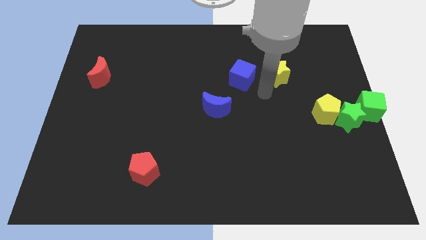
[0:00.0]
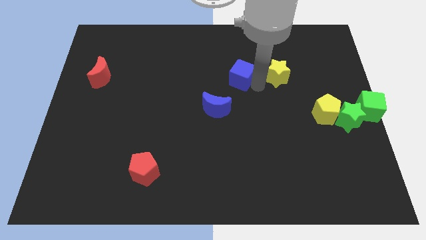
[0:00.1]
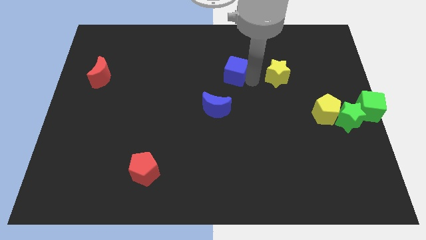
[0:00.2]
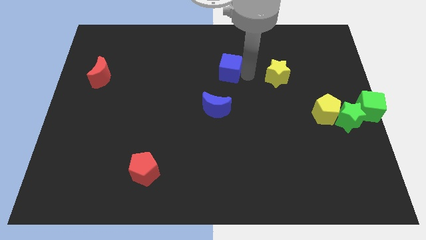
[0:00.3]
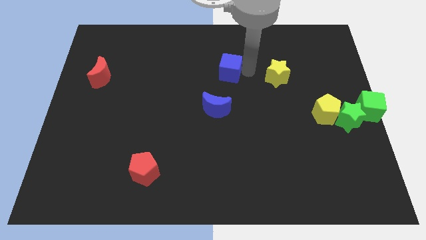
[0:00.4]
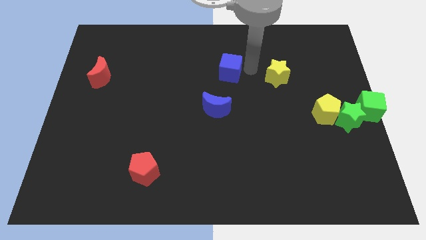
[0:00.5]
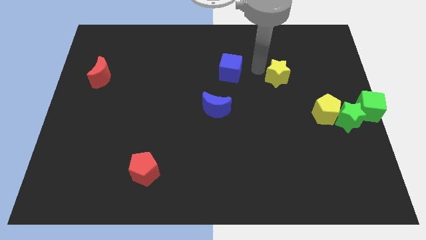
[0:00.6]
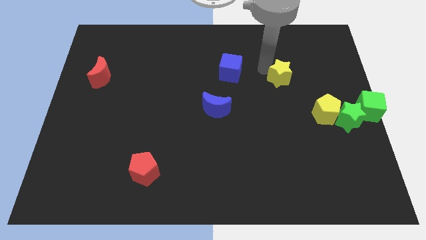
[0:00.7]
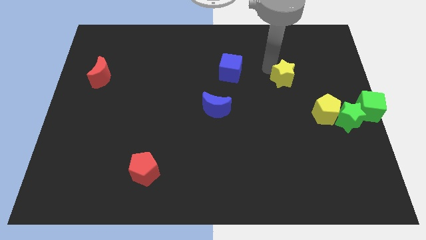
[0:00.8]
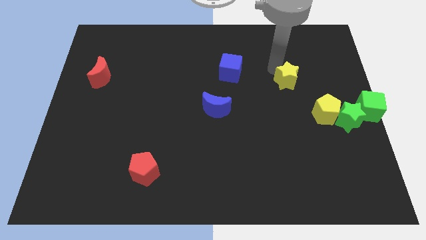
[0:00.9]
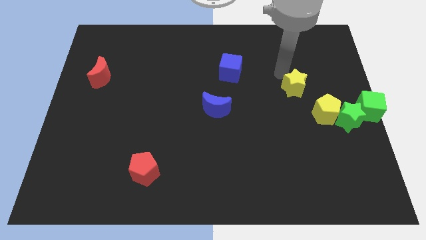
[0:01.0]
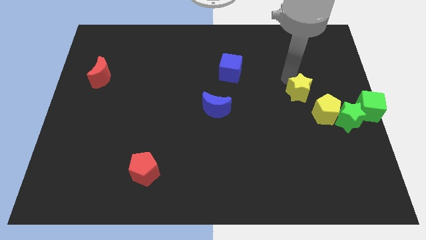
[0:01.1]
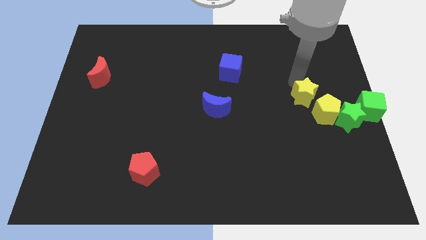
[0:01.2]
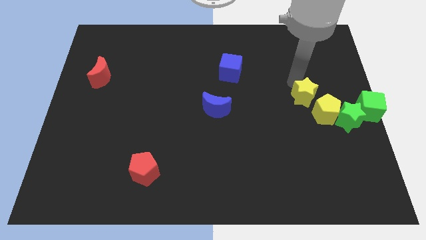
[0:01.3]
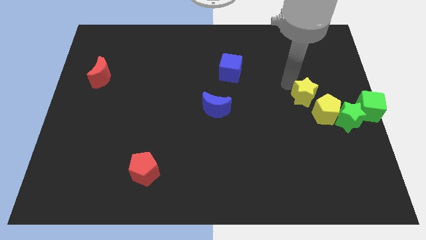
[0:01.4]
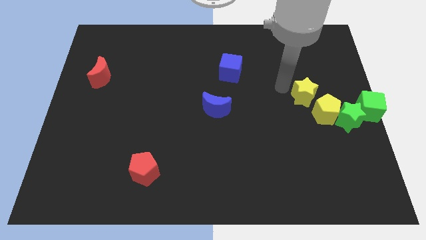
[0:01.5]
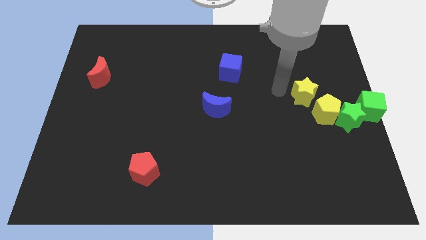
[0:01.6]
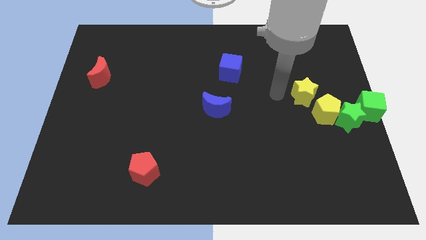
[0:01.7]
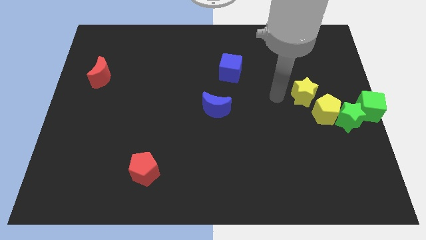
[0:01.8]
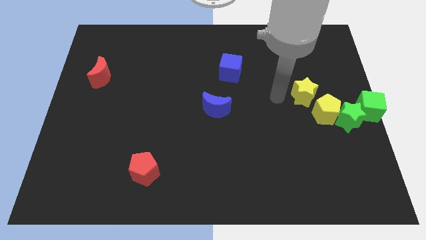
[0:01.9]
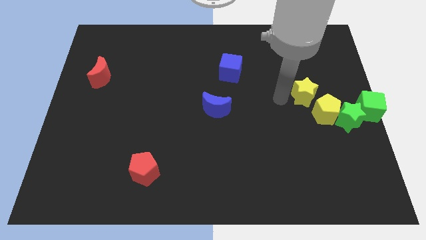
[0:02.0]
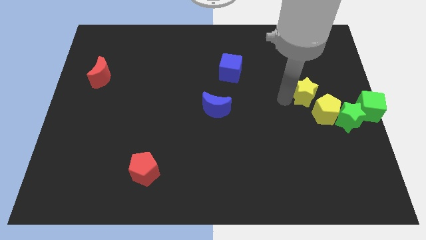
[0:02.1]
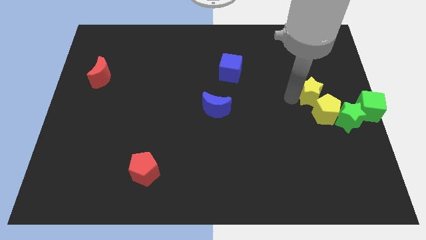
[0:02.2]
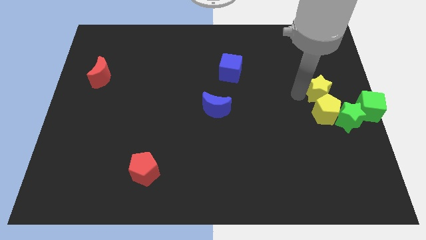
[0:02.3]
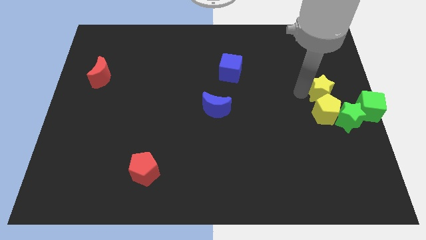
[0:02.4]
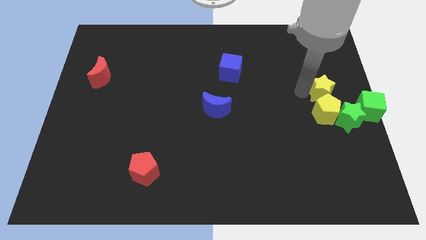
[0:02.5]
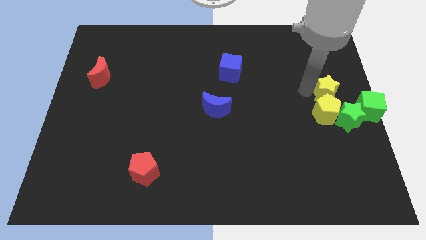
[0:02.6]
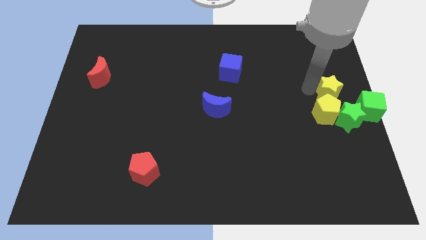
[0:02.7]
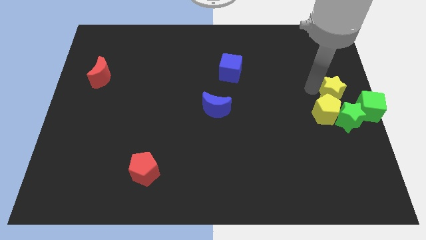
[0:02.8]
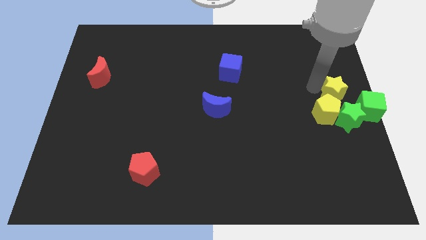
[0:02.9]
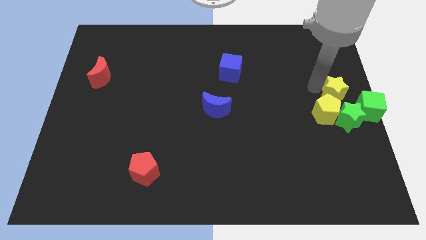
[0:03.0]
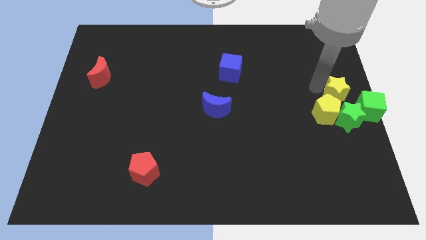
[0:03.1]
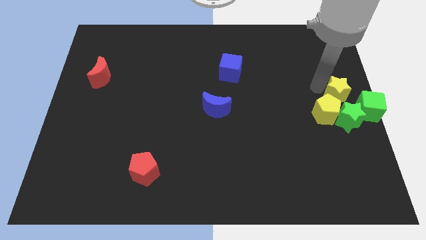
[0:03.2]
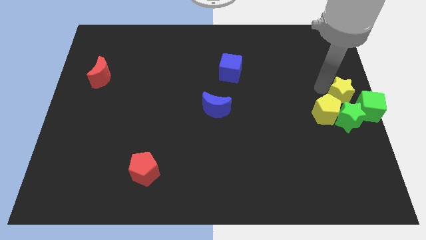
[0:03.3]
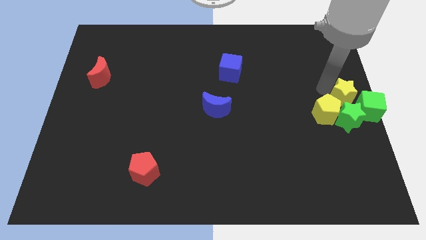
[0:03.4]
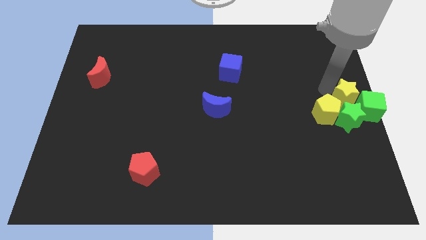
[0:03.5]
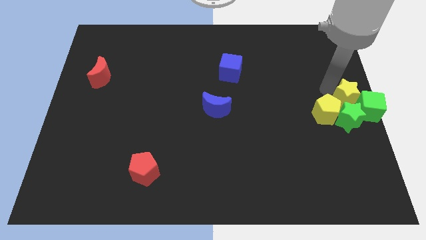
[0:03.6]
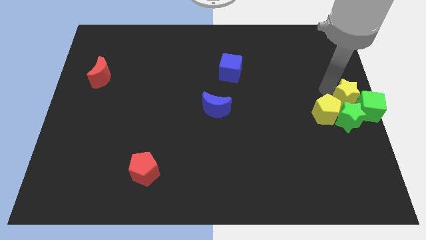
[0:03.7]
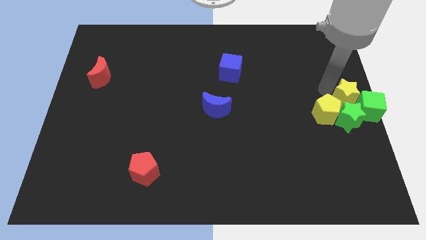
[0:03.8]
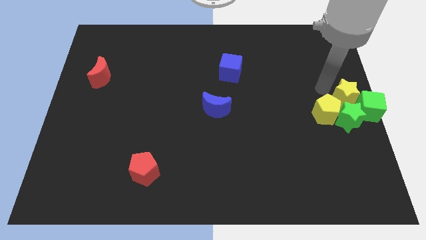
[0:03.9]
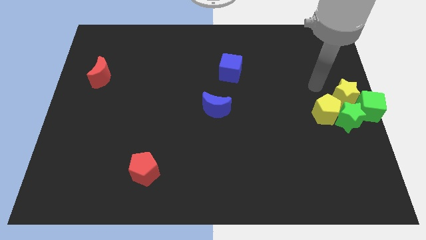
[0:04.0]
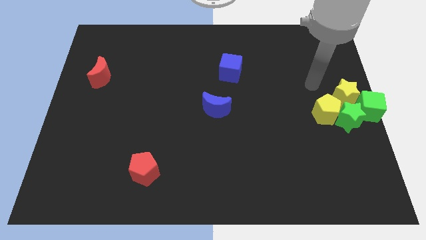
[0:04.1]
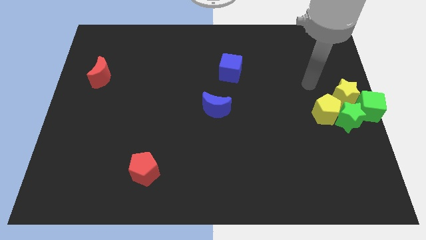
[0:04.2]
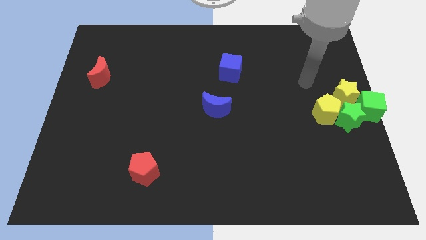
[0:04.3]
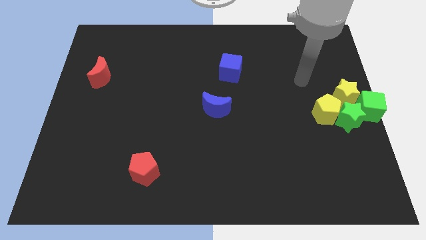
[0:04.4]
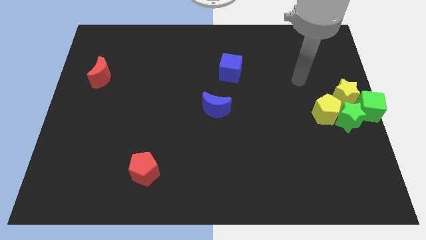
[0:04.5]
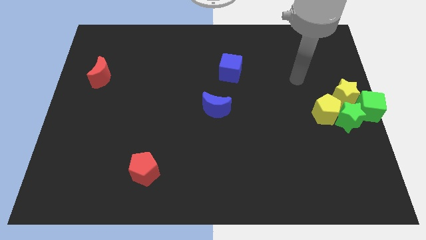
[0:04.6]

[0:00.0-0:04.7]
place the yellow star to the top of the green star

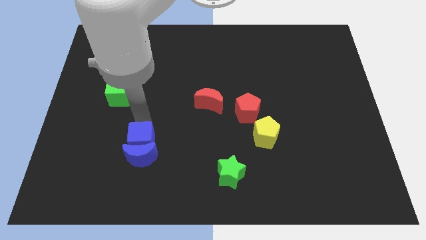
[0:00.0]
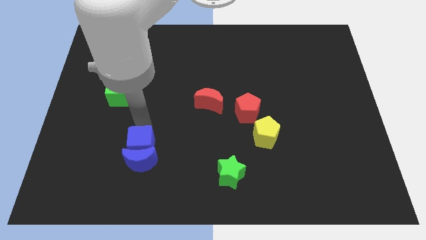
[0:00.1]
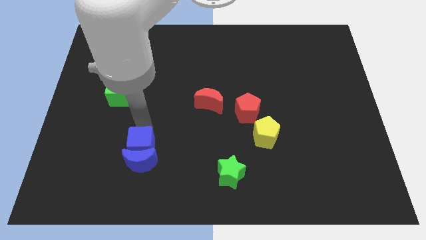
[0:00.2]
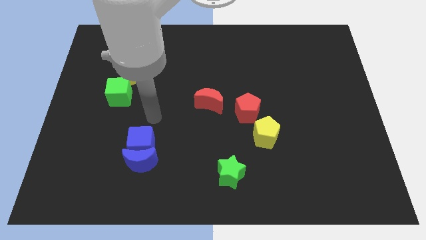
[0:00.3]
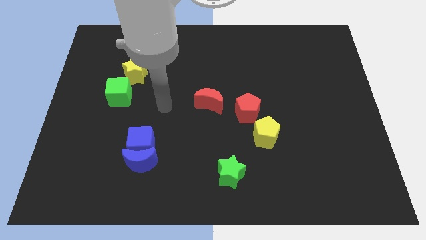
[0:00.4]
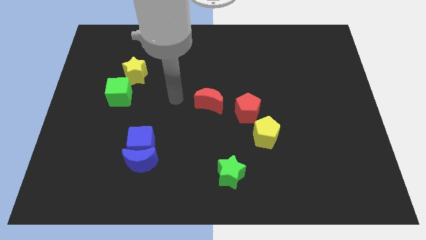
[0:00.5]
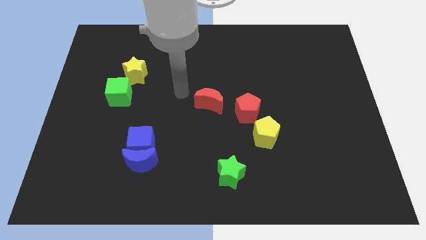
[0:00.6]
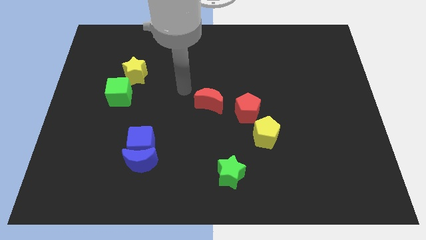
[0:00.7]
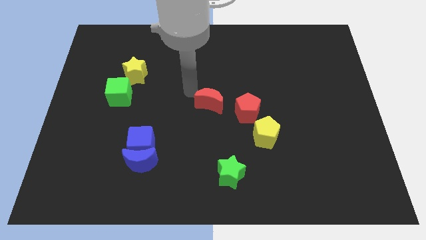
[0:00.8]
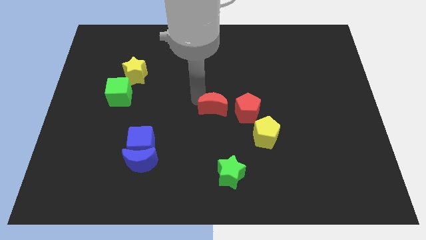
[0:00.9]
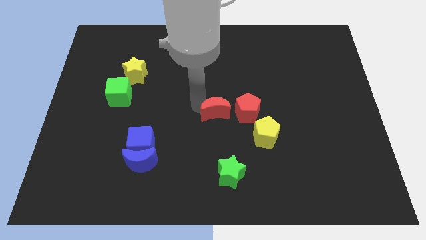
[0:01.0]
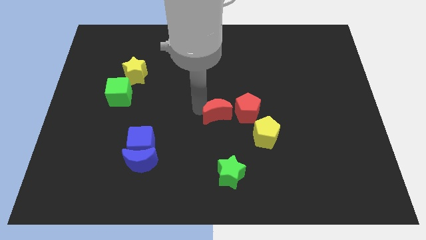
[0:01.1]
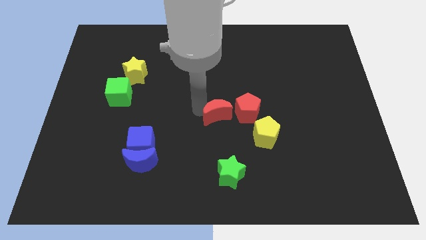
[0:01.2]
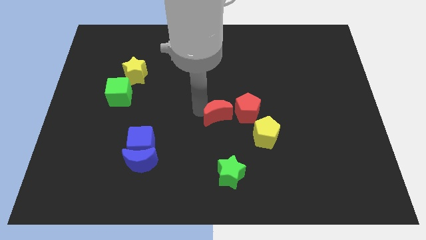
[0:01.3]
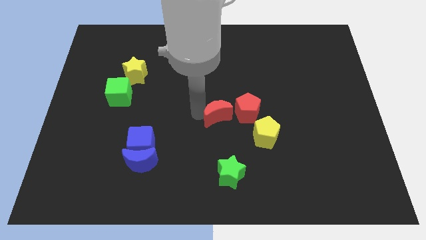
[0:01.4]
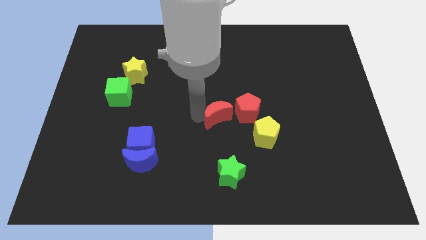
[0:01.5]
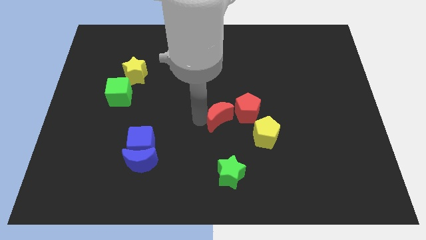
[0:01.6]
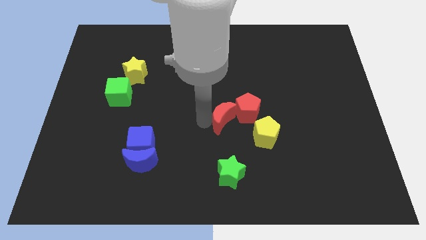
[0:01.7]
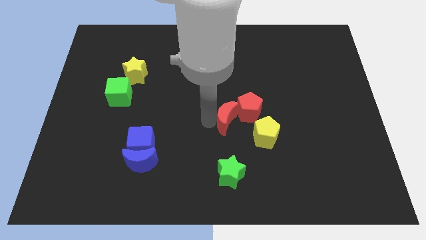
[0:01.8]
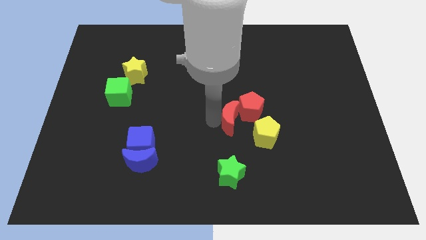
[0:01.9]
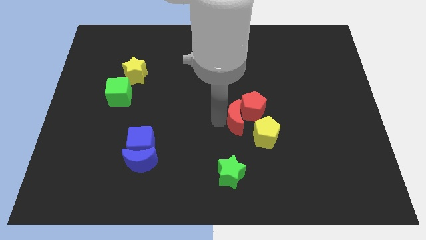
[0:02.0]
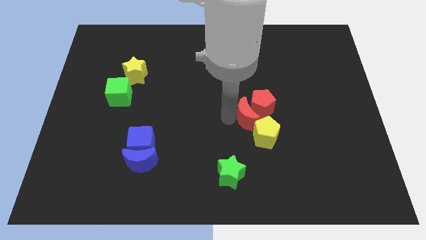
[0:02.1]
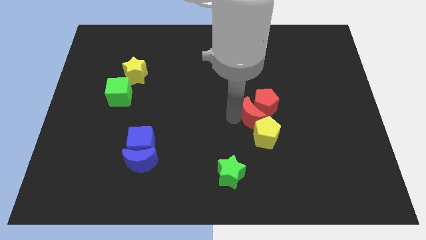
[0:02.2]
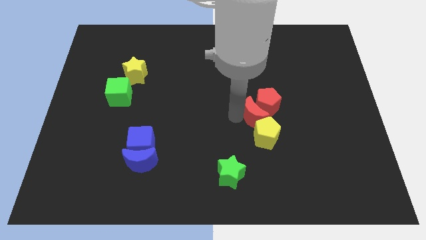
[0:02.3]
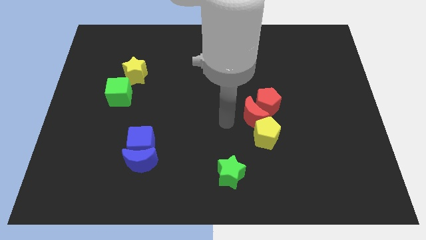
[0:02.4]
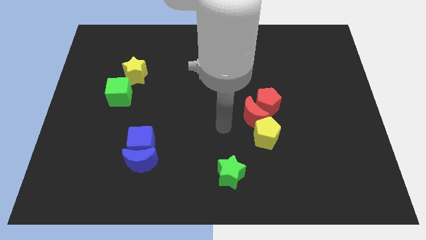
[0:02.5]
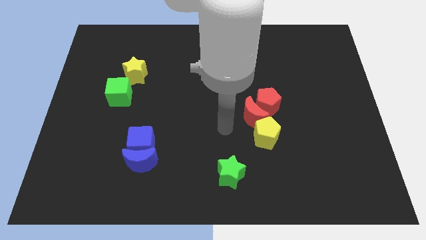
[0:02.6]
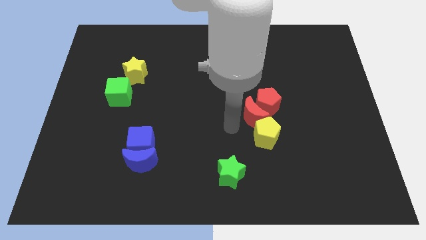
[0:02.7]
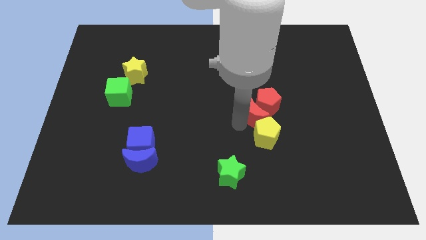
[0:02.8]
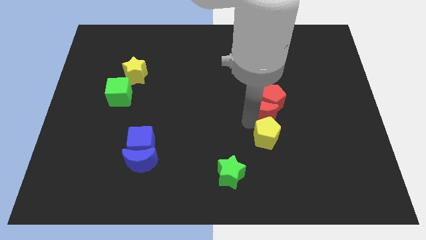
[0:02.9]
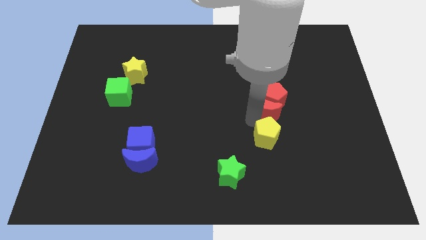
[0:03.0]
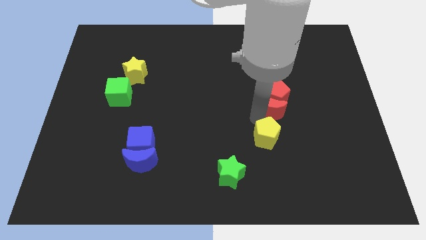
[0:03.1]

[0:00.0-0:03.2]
move the red pentagon with the help of red crescent towards the top right side of the board

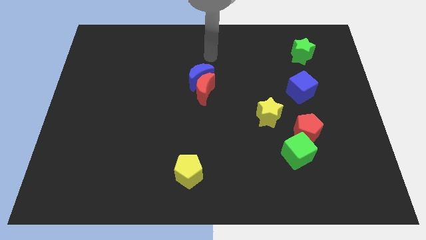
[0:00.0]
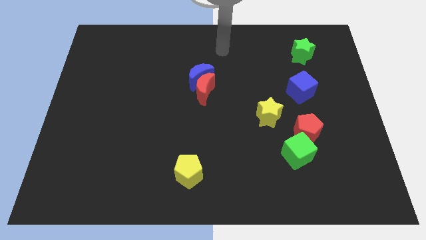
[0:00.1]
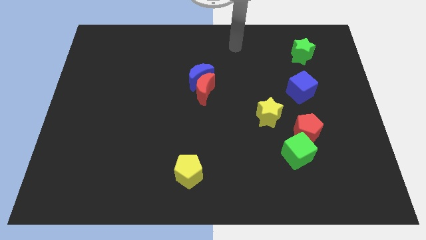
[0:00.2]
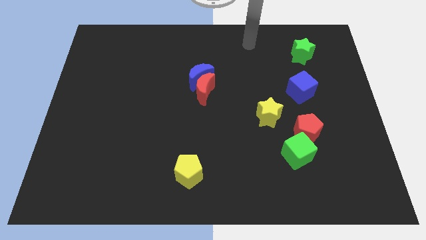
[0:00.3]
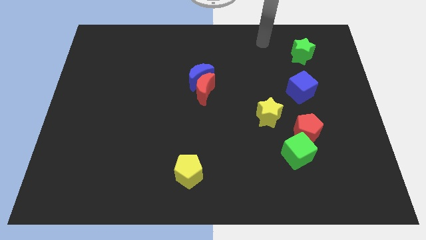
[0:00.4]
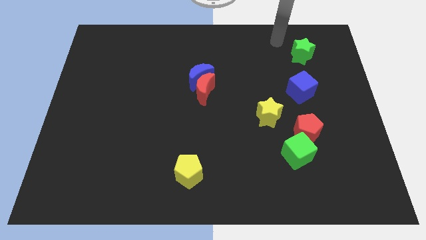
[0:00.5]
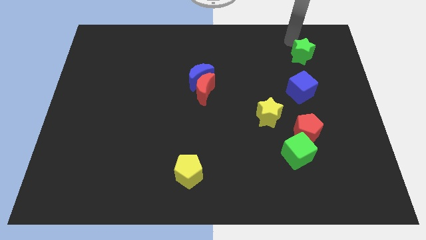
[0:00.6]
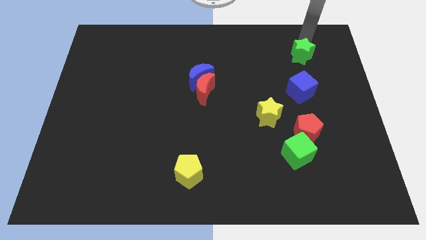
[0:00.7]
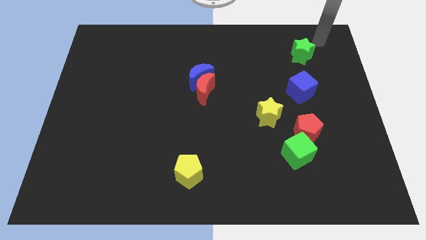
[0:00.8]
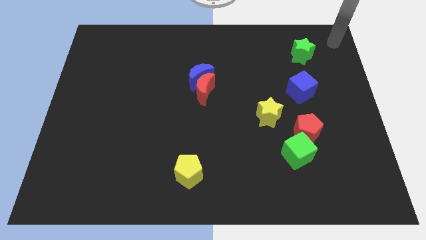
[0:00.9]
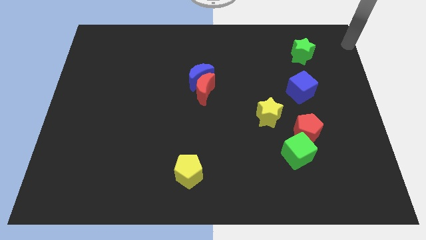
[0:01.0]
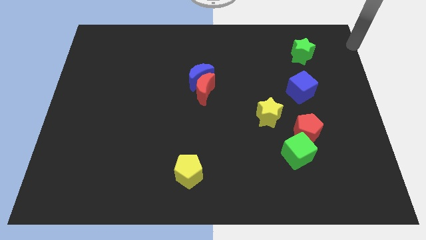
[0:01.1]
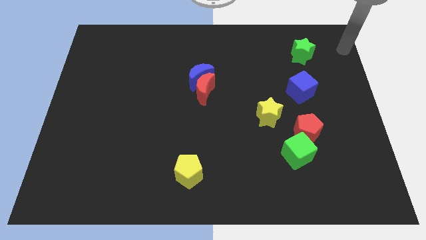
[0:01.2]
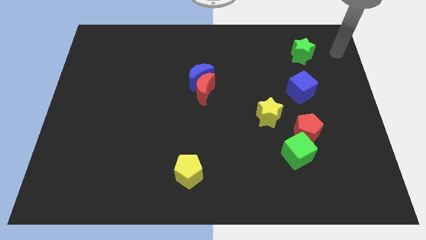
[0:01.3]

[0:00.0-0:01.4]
move your arm towards top right corner of the board
